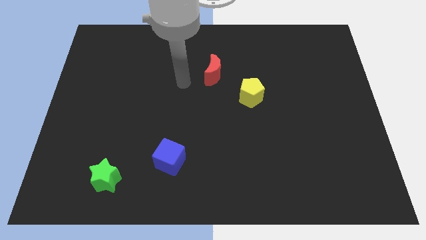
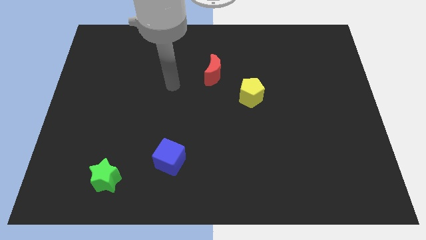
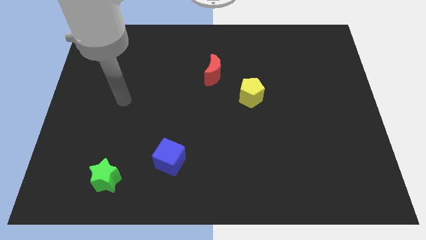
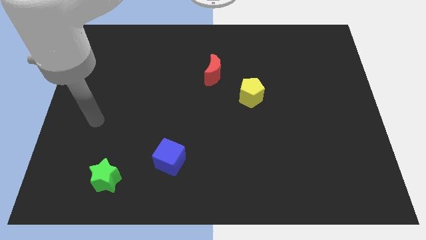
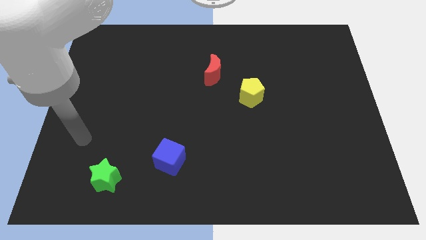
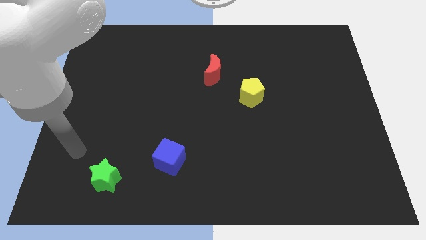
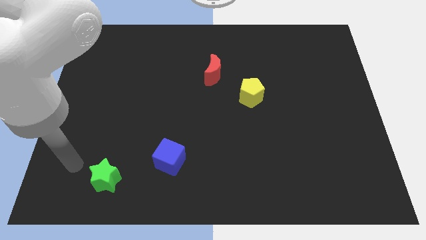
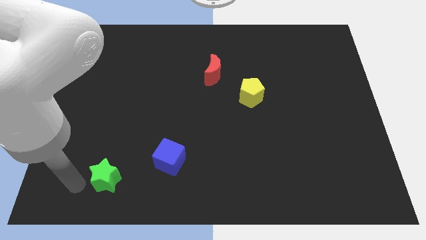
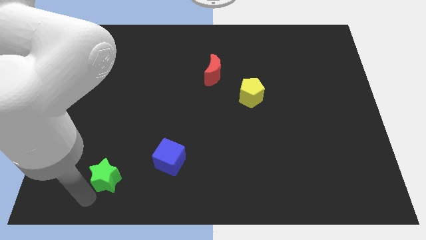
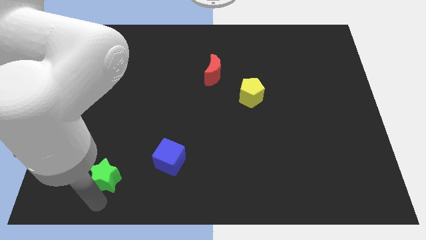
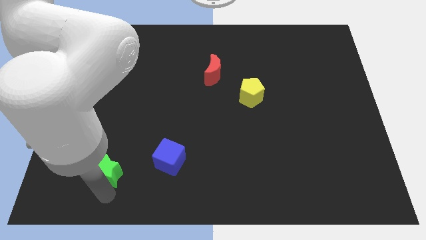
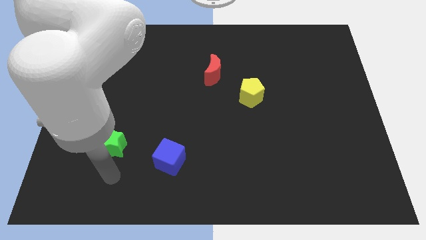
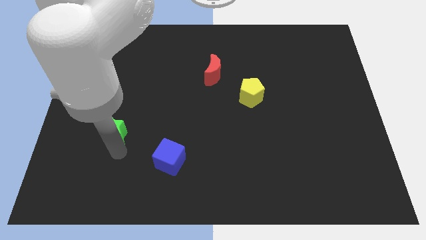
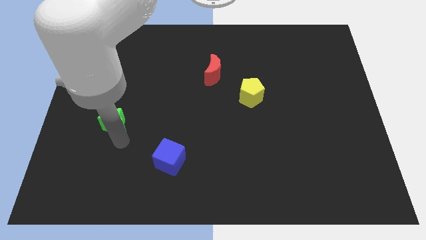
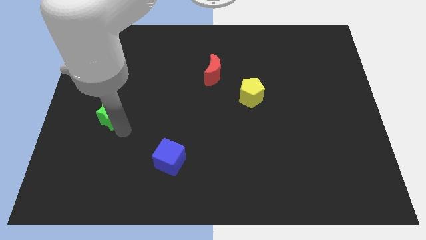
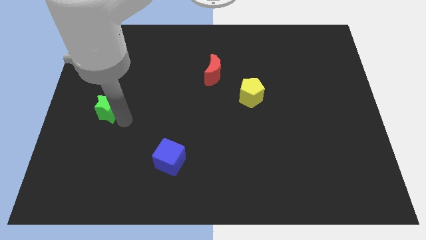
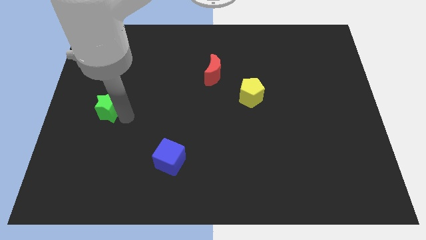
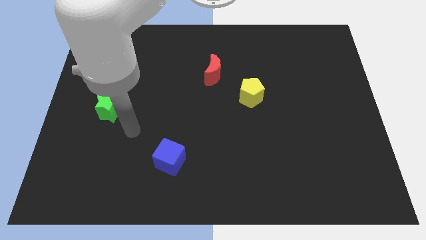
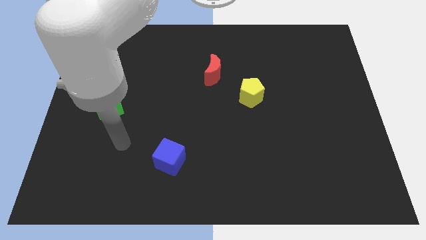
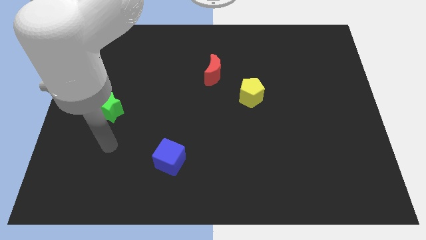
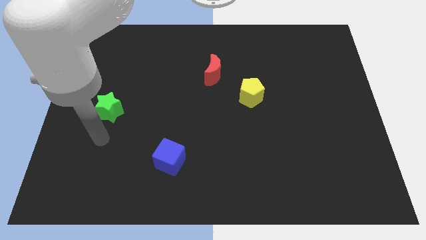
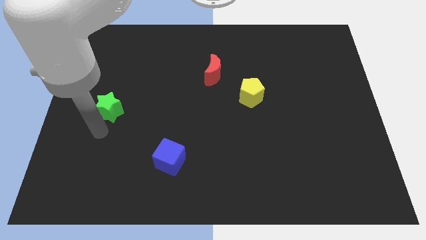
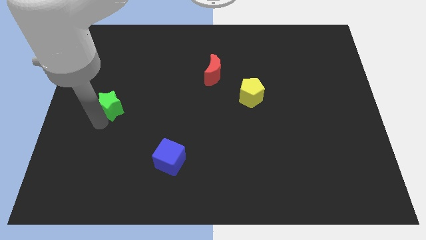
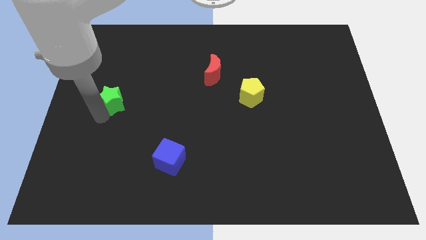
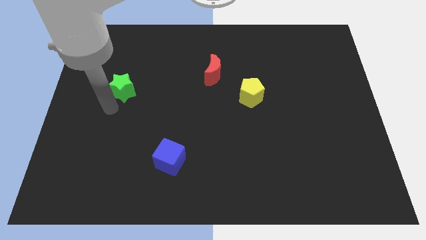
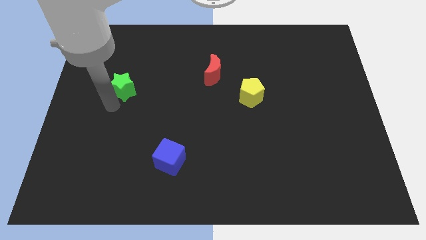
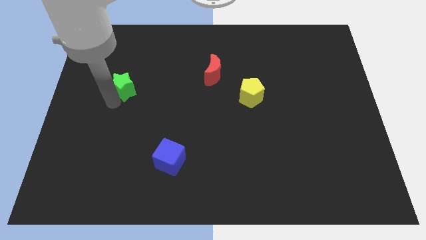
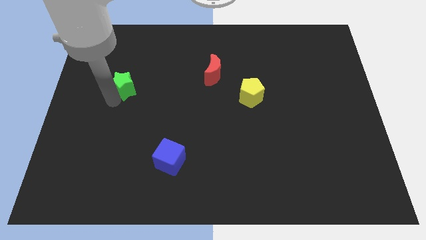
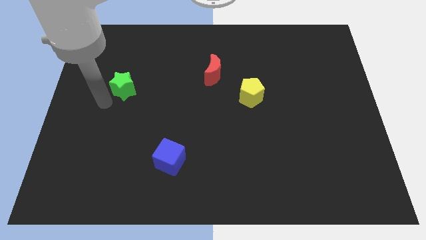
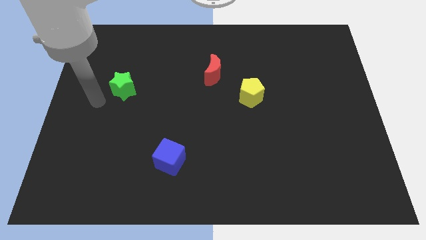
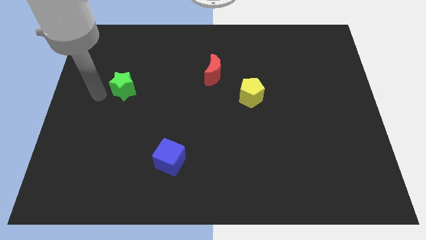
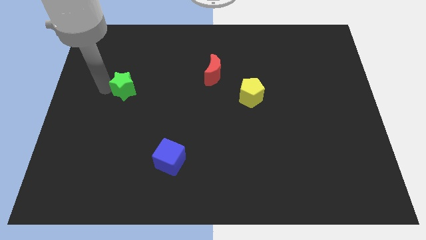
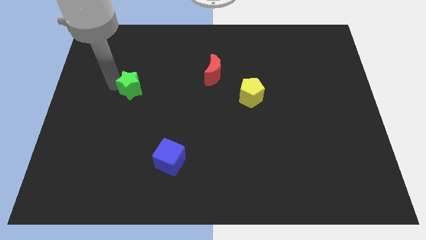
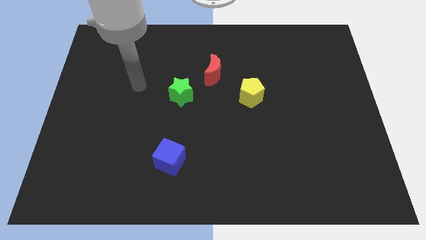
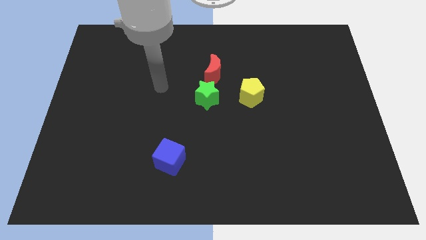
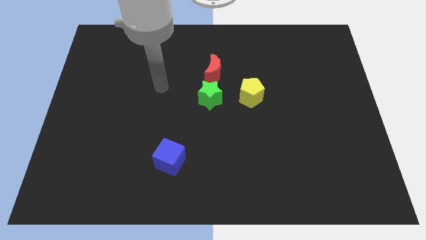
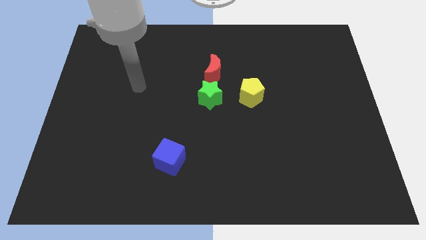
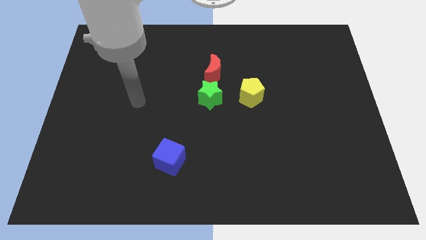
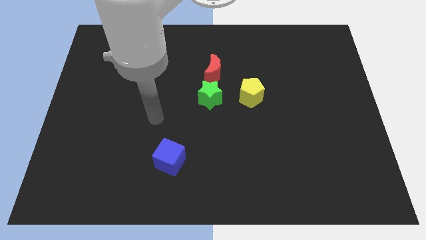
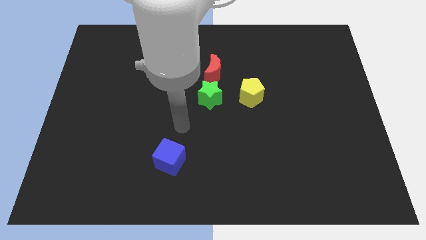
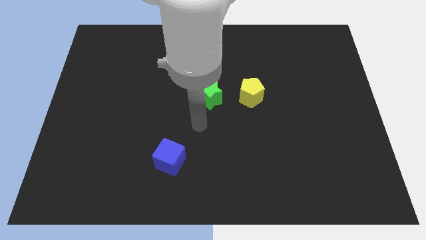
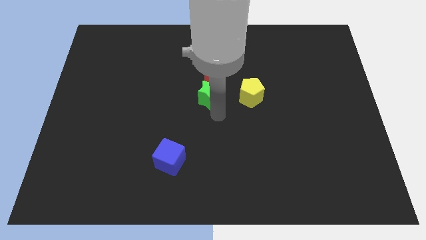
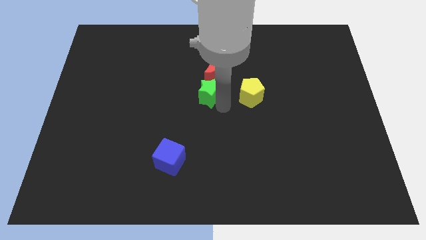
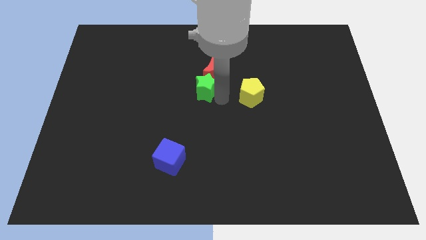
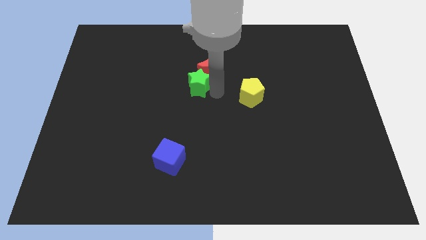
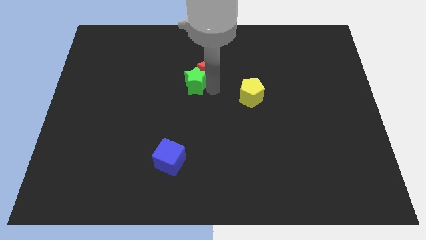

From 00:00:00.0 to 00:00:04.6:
slide the star towards the red moon

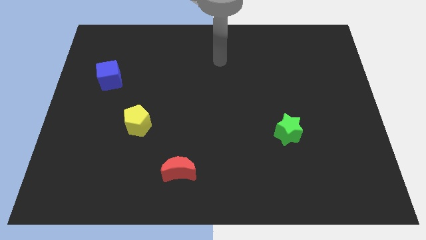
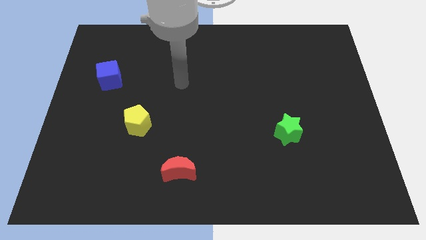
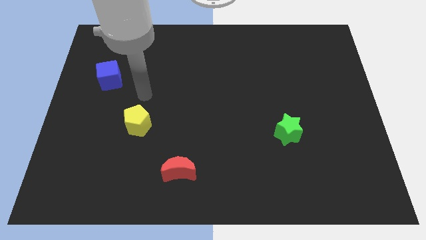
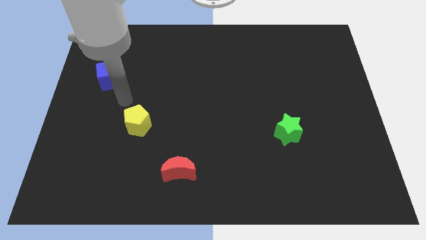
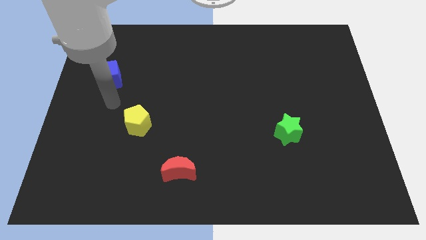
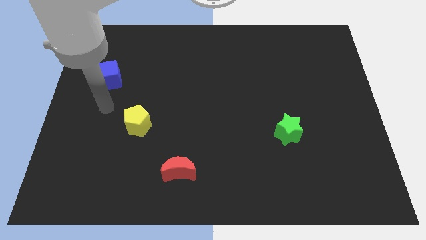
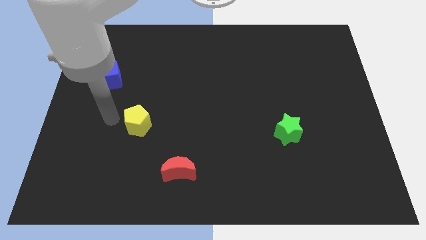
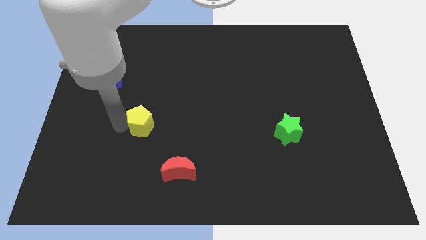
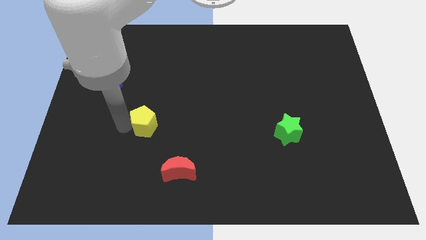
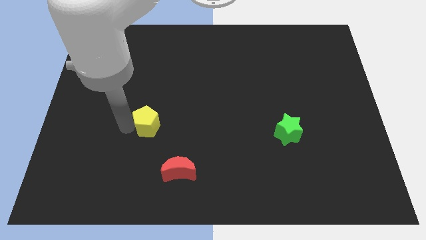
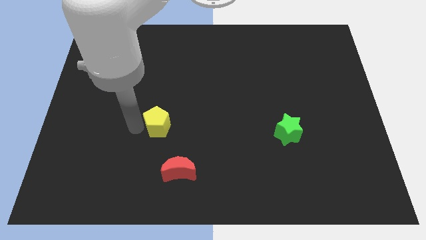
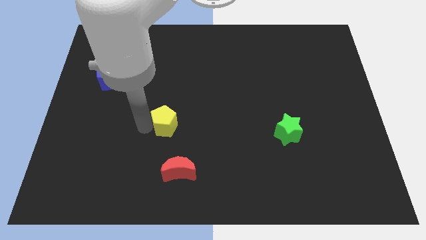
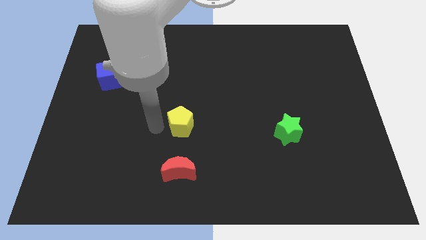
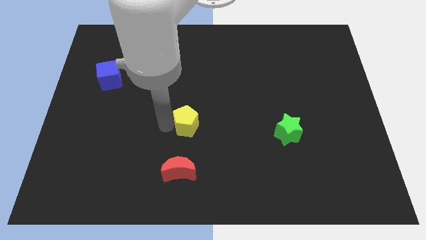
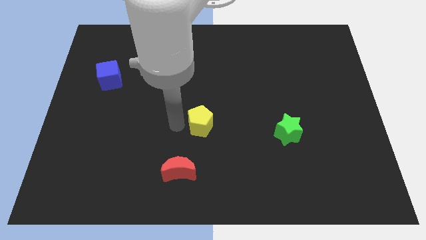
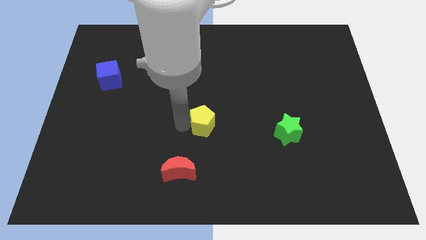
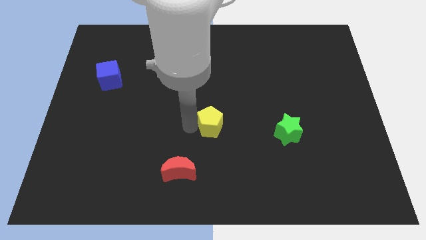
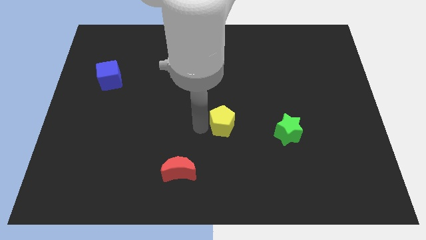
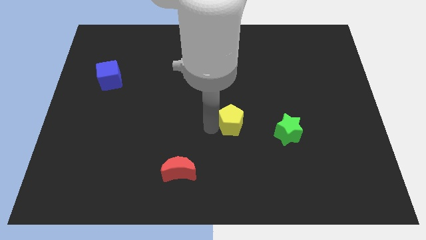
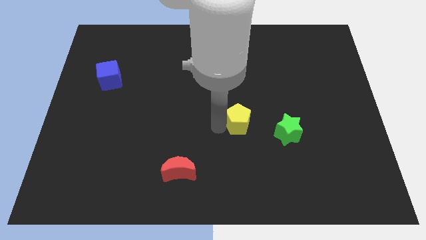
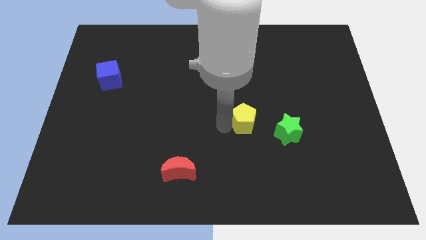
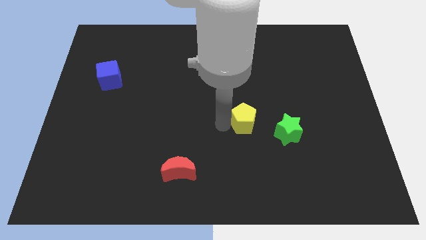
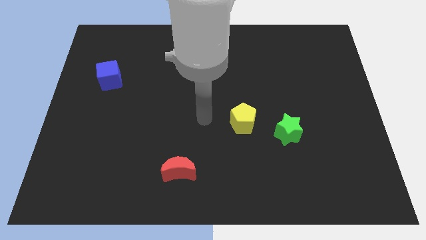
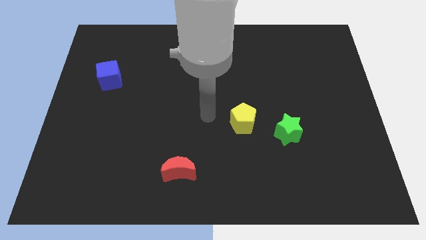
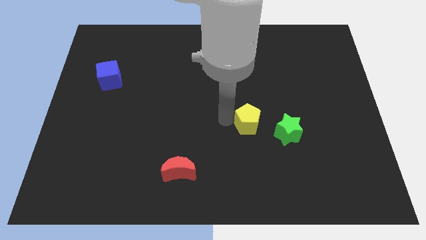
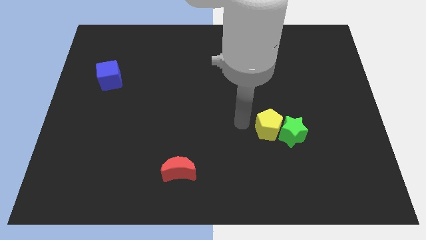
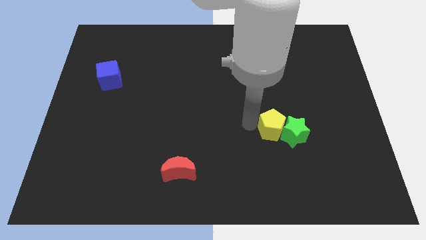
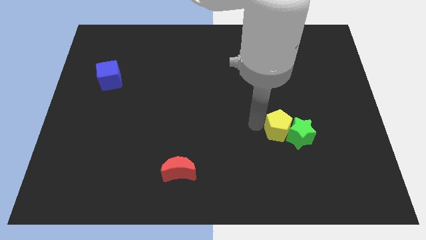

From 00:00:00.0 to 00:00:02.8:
push the yellow pentagon close to the green block

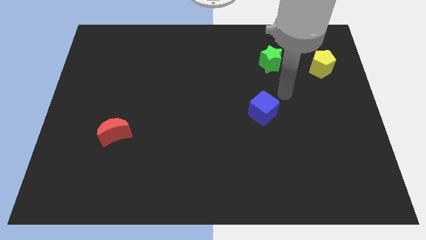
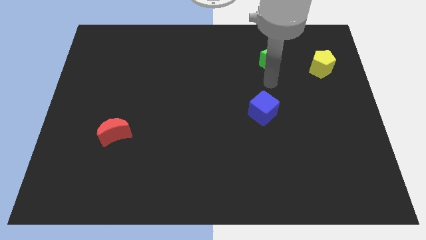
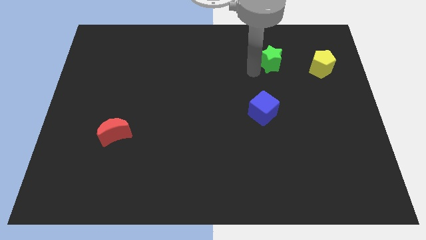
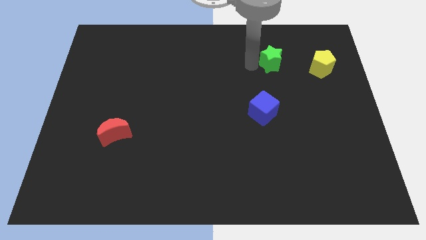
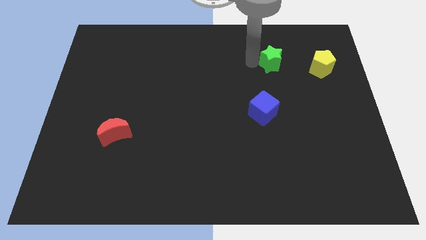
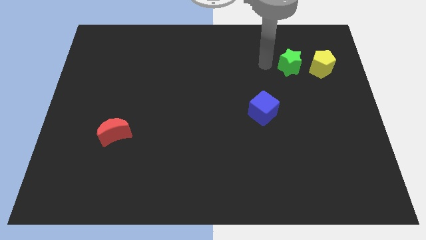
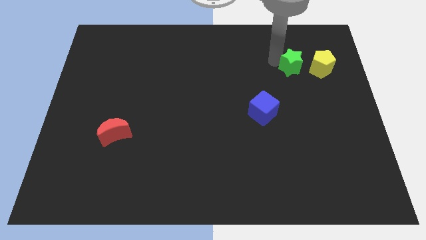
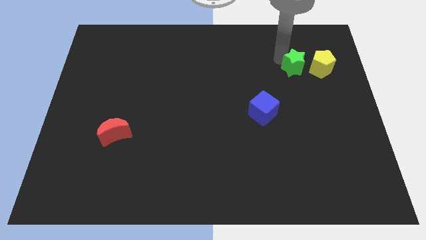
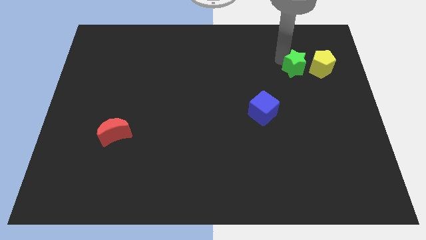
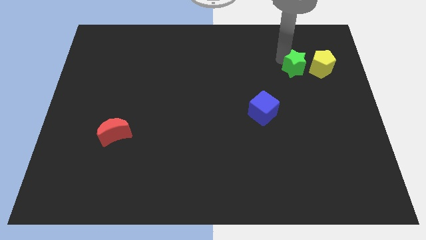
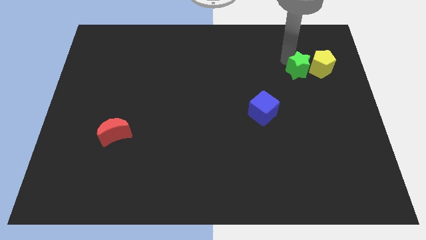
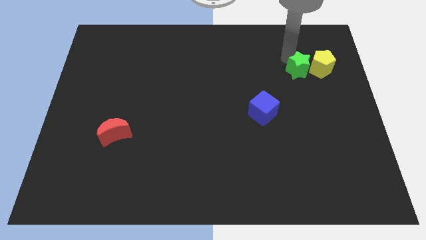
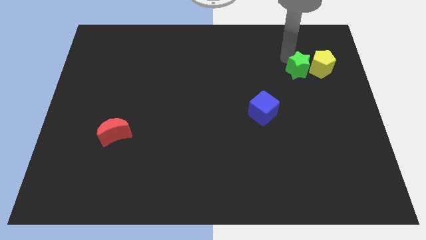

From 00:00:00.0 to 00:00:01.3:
slide the star towards the yellow pentagon
